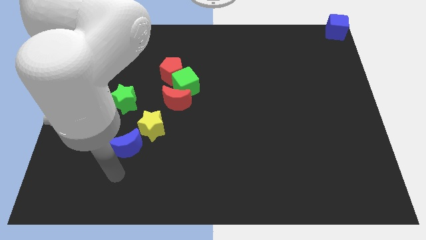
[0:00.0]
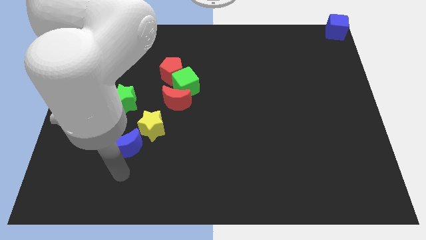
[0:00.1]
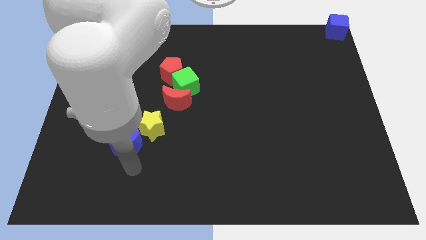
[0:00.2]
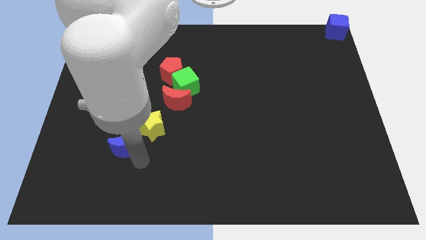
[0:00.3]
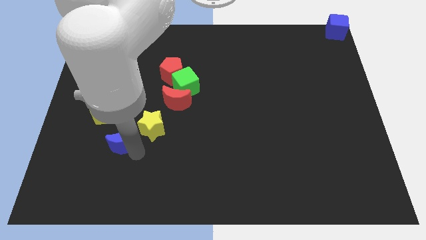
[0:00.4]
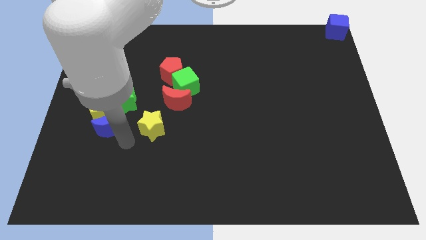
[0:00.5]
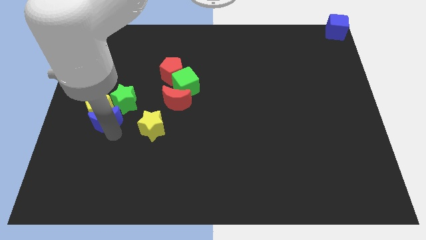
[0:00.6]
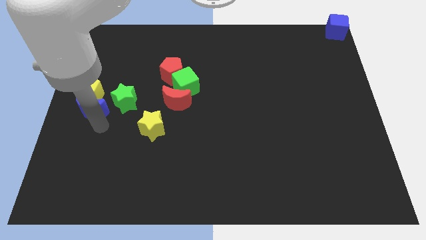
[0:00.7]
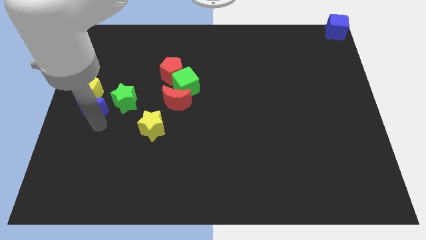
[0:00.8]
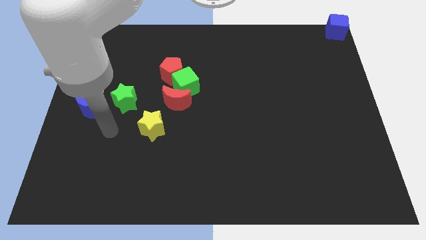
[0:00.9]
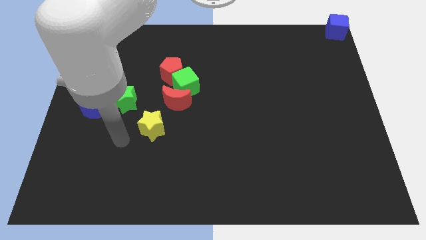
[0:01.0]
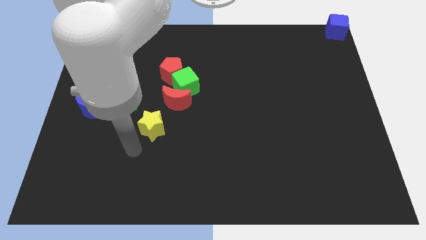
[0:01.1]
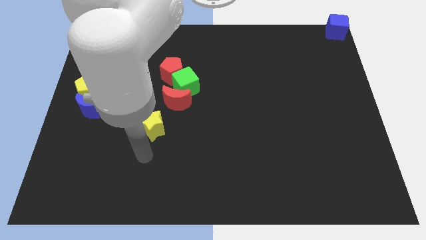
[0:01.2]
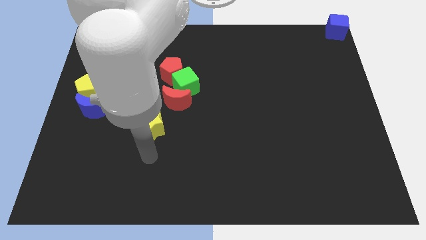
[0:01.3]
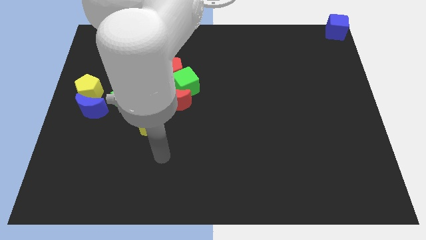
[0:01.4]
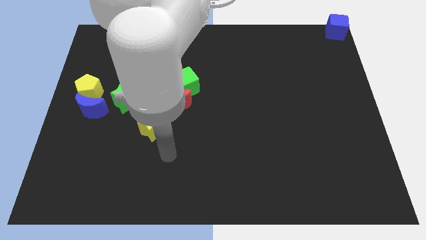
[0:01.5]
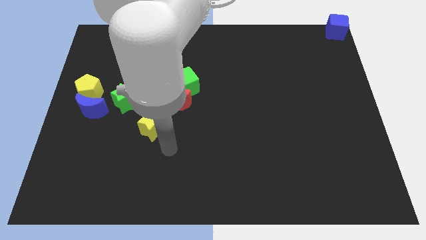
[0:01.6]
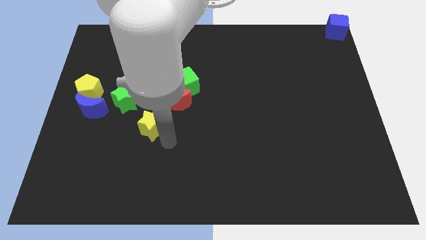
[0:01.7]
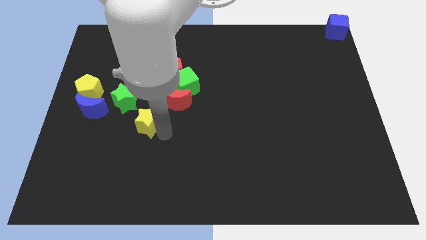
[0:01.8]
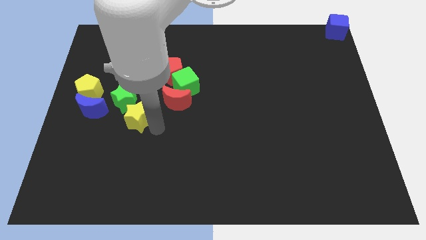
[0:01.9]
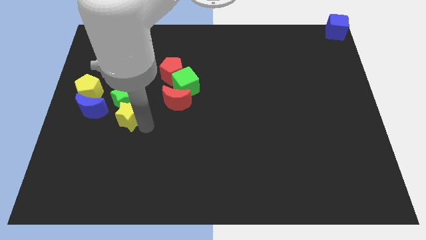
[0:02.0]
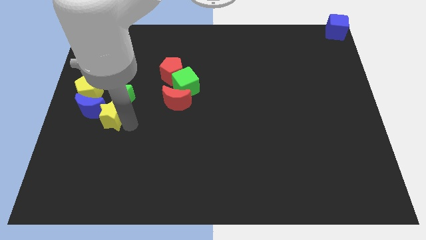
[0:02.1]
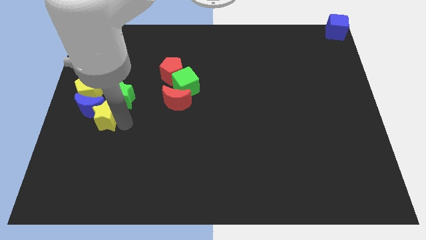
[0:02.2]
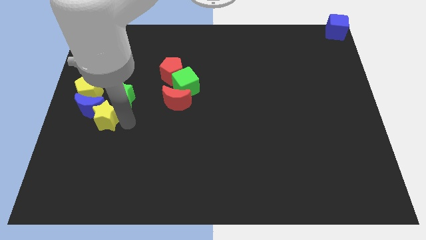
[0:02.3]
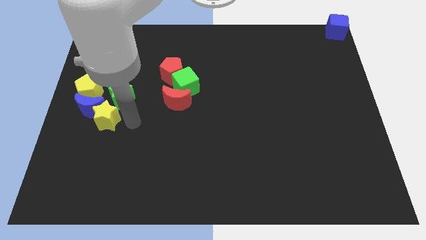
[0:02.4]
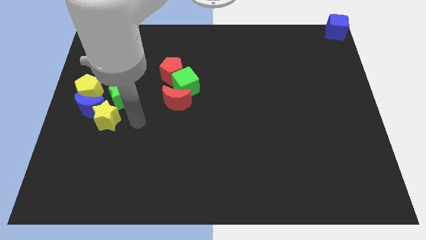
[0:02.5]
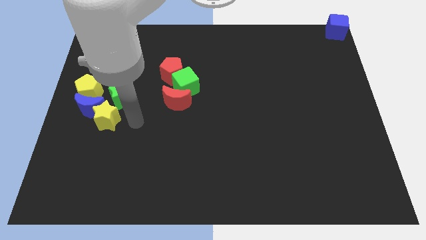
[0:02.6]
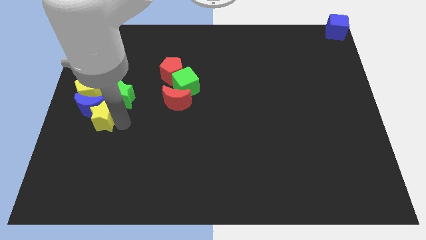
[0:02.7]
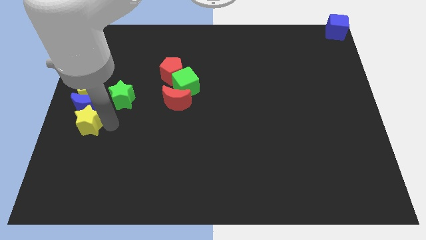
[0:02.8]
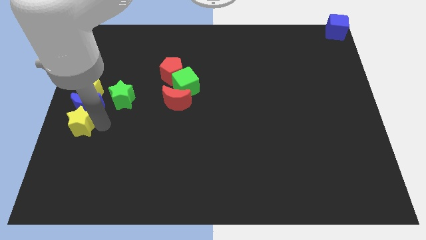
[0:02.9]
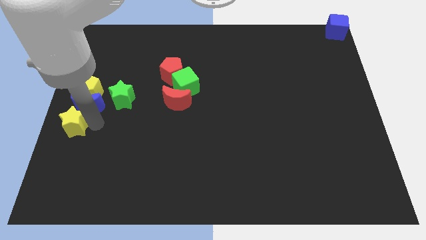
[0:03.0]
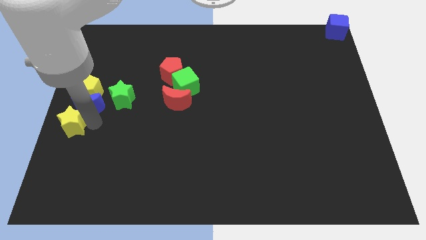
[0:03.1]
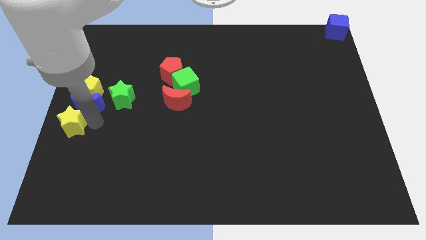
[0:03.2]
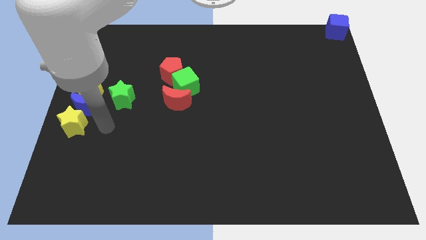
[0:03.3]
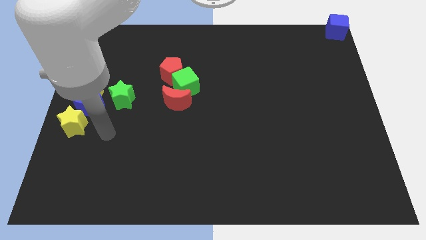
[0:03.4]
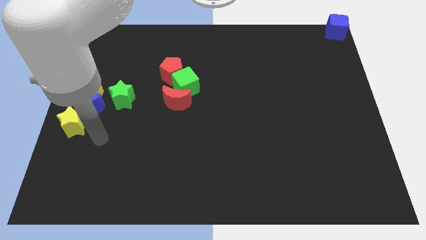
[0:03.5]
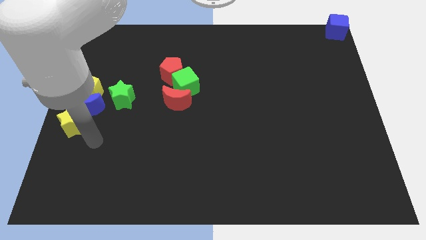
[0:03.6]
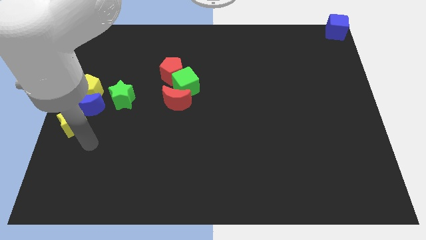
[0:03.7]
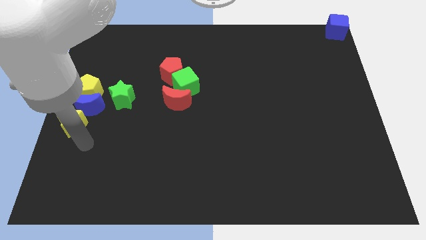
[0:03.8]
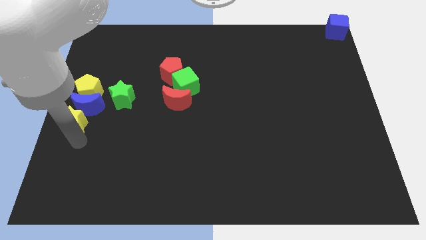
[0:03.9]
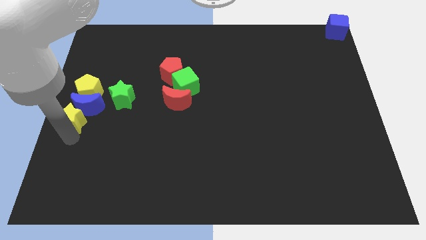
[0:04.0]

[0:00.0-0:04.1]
push the blue moon between the yellow pentagon and yellow star

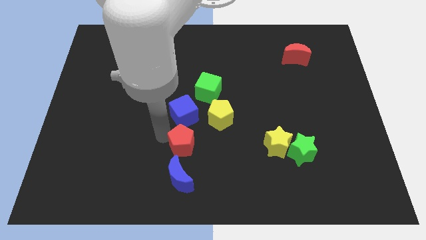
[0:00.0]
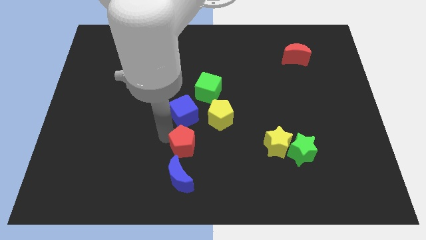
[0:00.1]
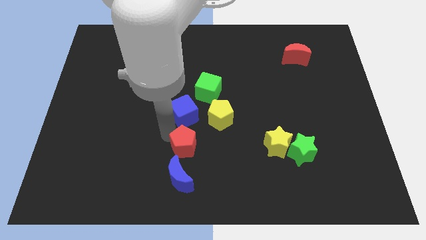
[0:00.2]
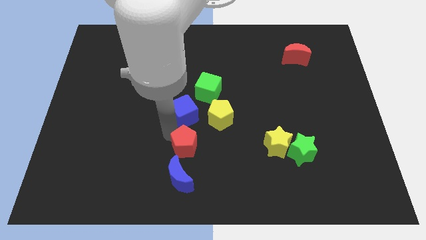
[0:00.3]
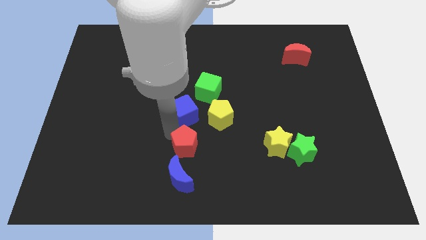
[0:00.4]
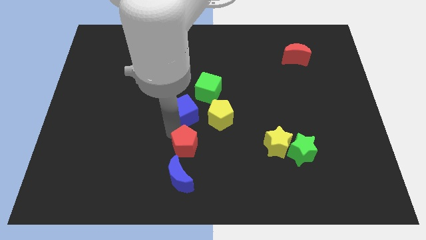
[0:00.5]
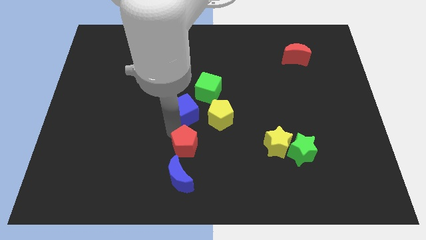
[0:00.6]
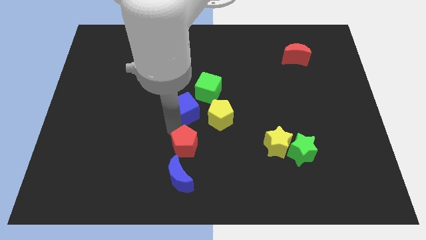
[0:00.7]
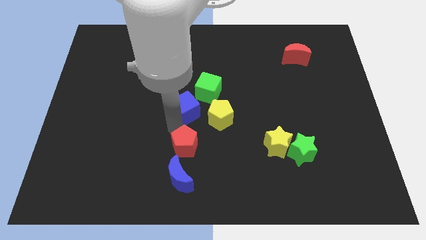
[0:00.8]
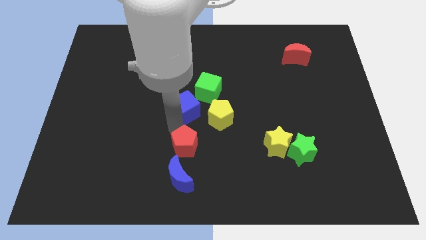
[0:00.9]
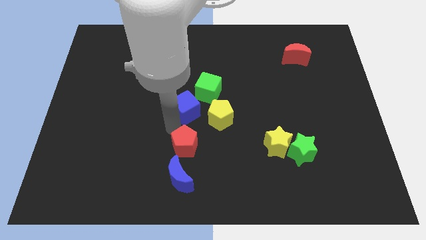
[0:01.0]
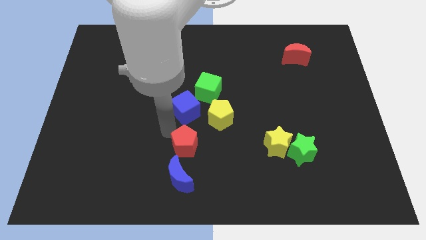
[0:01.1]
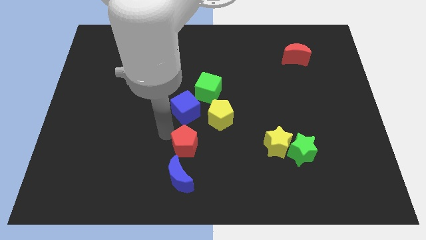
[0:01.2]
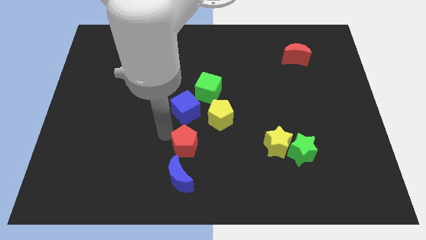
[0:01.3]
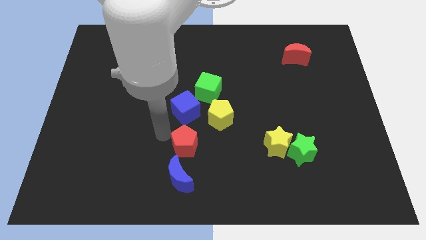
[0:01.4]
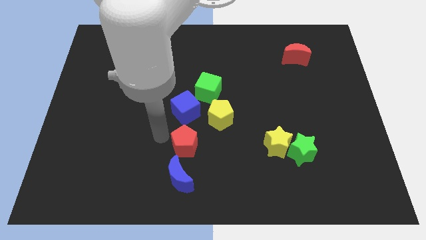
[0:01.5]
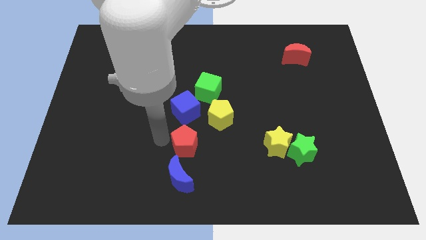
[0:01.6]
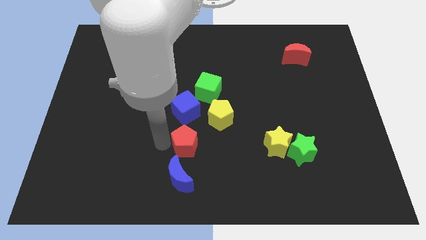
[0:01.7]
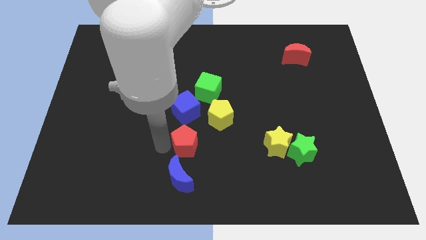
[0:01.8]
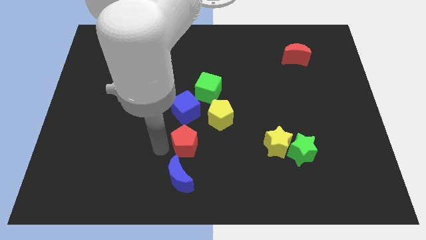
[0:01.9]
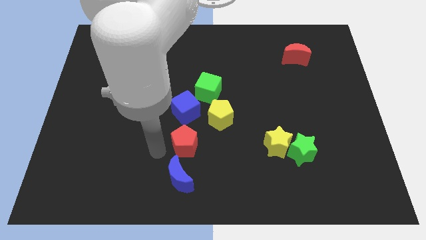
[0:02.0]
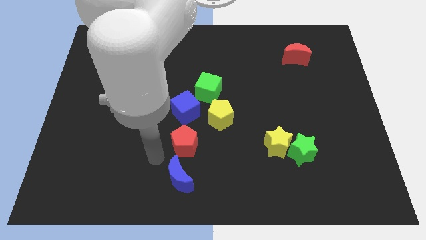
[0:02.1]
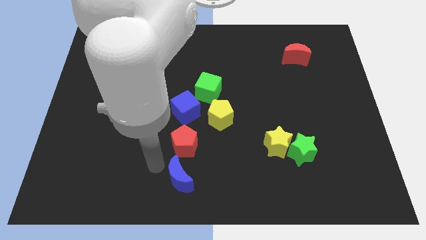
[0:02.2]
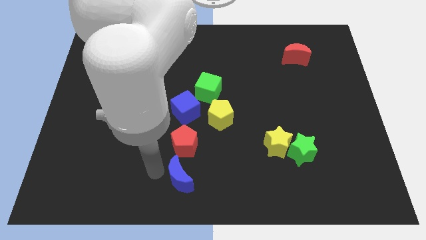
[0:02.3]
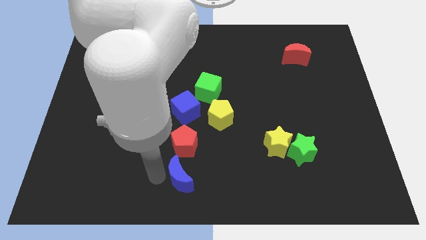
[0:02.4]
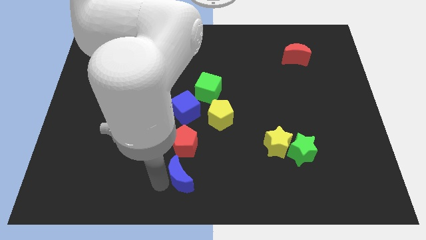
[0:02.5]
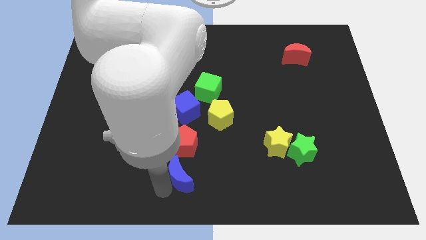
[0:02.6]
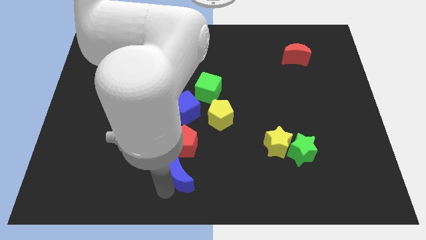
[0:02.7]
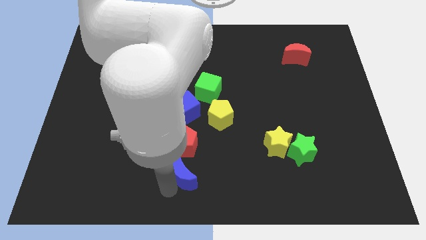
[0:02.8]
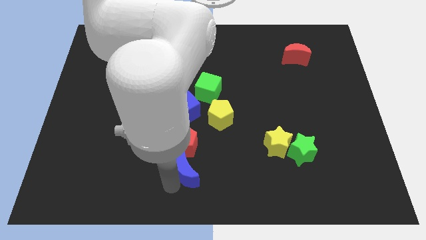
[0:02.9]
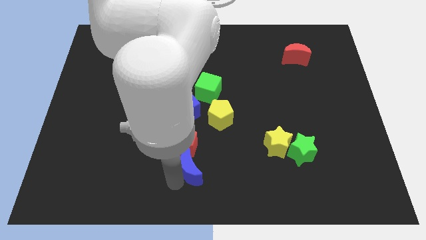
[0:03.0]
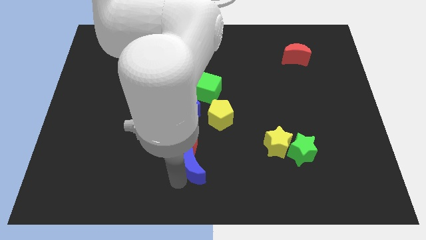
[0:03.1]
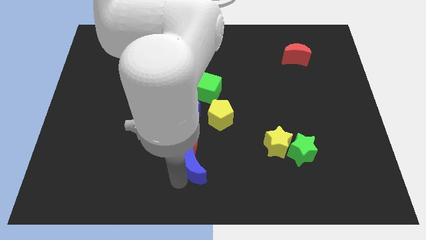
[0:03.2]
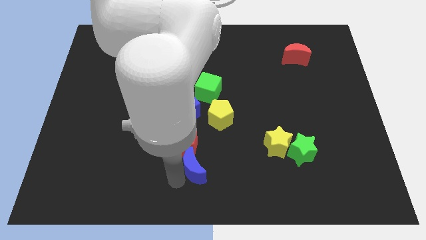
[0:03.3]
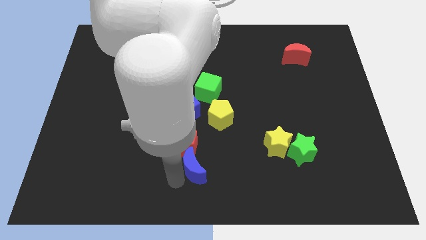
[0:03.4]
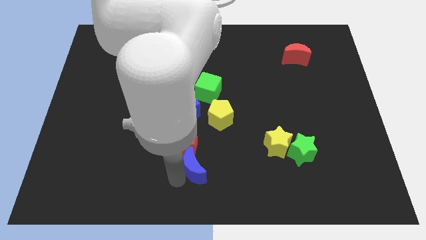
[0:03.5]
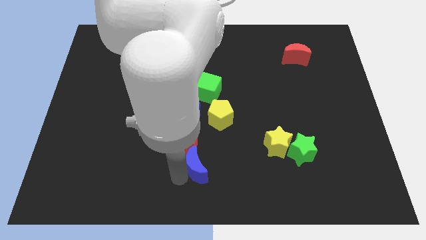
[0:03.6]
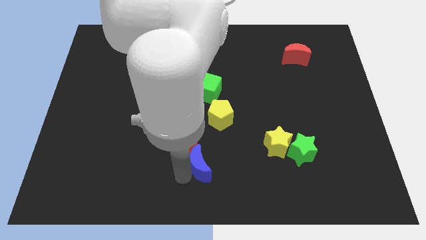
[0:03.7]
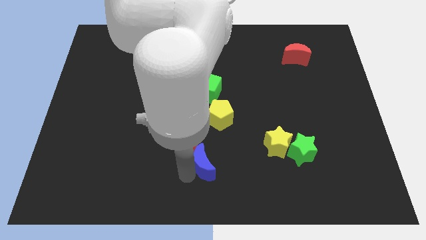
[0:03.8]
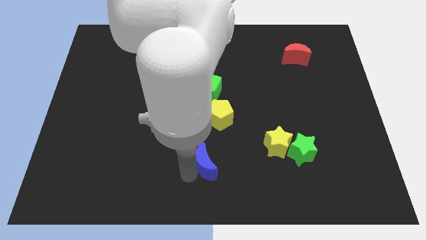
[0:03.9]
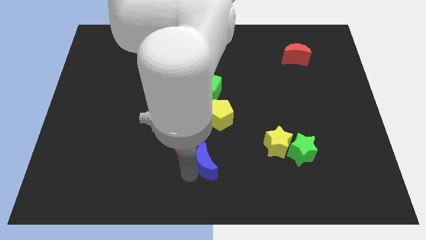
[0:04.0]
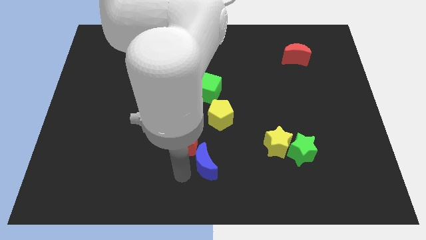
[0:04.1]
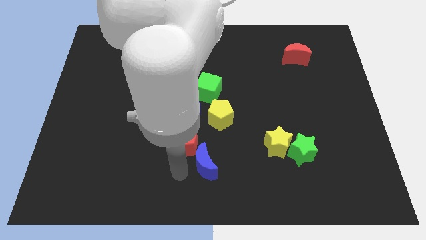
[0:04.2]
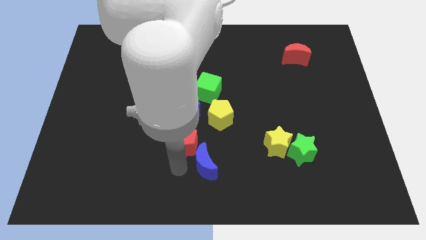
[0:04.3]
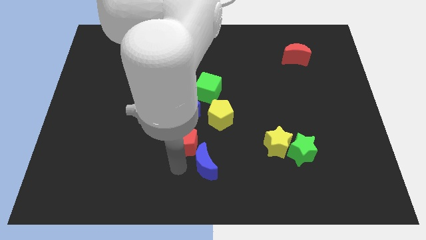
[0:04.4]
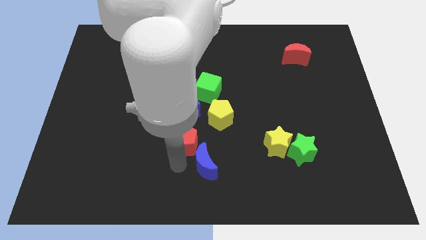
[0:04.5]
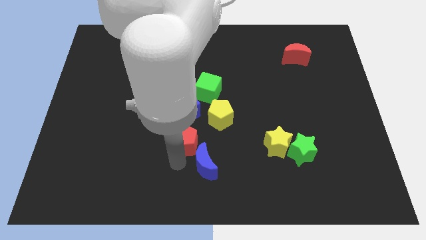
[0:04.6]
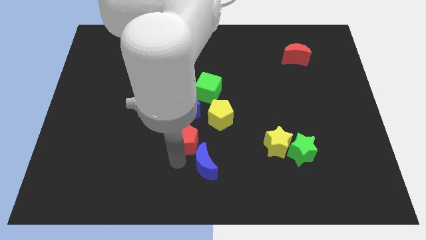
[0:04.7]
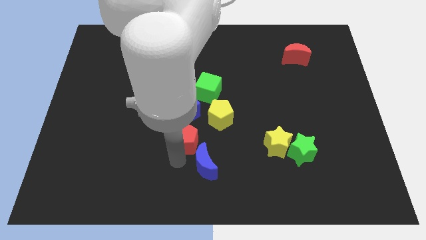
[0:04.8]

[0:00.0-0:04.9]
slide the blue moon diagonally bottom right of the red pentagon
